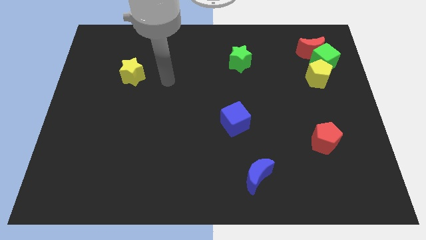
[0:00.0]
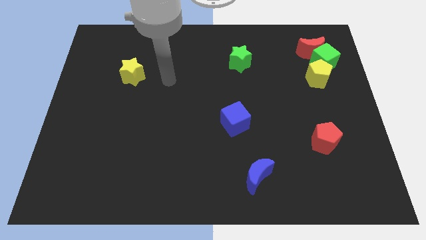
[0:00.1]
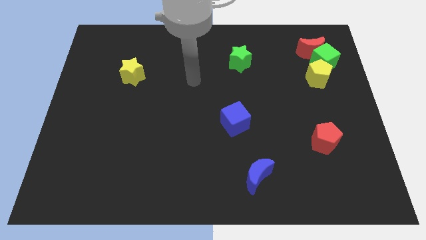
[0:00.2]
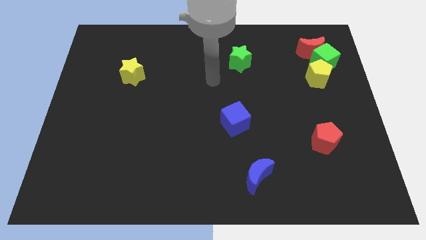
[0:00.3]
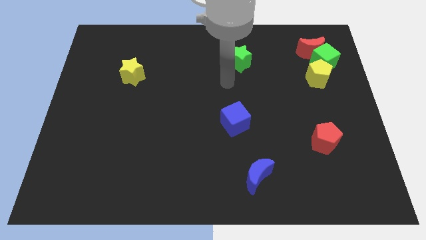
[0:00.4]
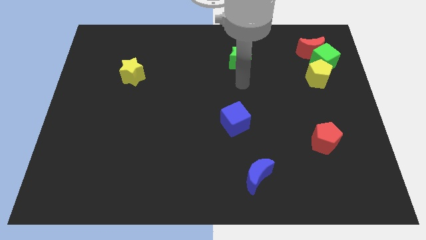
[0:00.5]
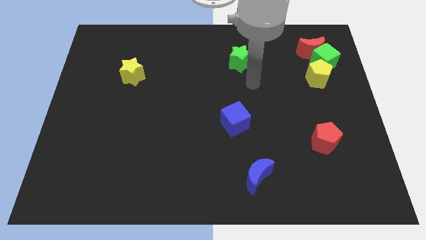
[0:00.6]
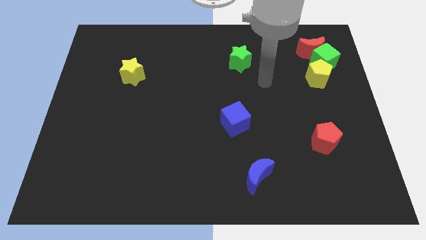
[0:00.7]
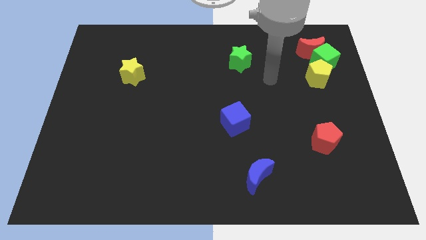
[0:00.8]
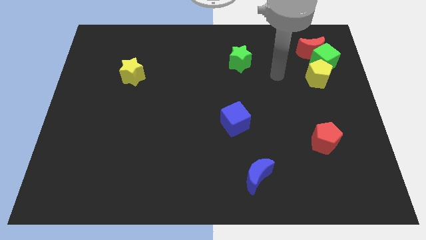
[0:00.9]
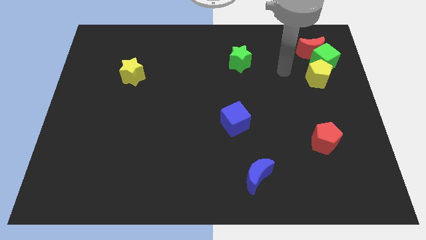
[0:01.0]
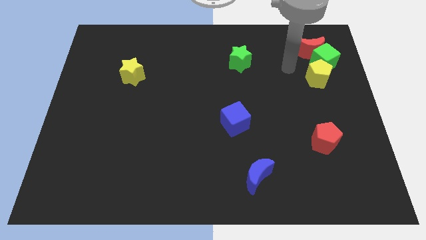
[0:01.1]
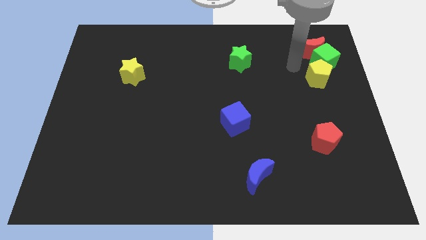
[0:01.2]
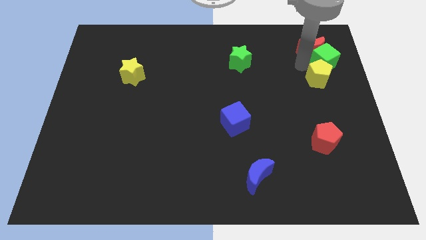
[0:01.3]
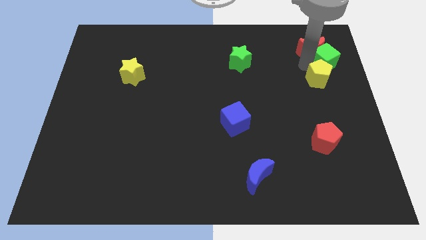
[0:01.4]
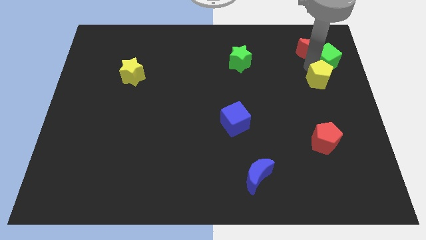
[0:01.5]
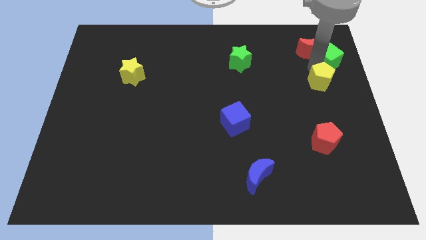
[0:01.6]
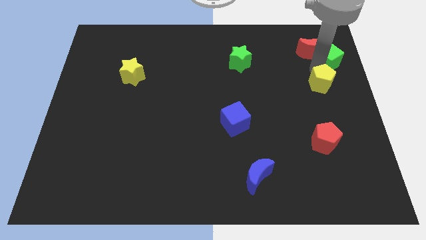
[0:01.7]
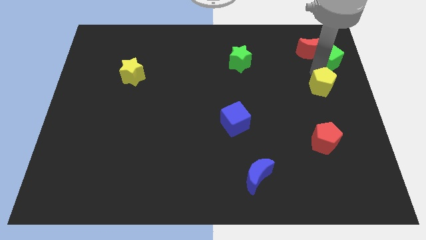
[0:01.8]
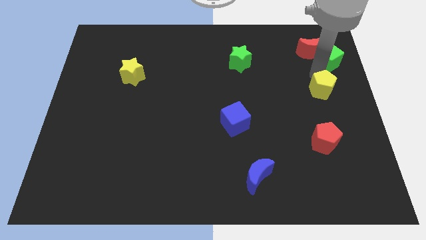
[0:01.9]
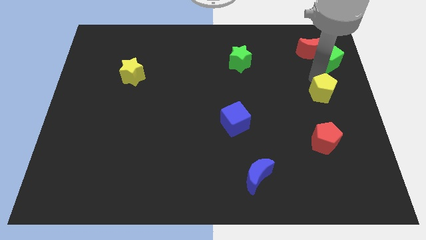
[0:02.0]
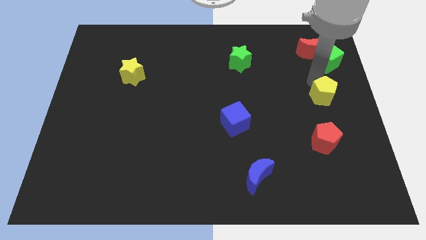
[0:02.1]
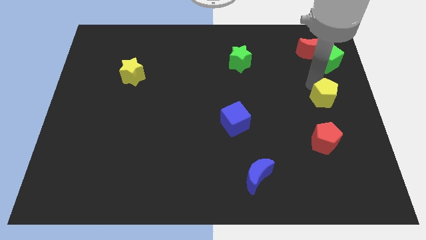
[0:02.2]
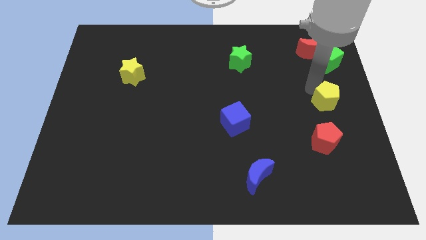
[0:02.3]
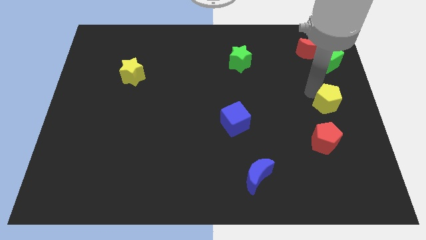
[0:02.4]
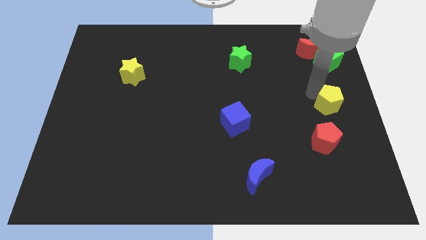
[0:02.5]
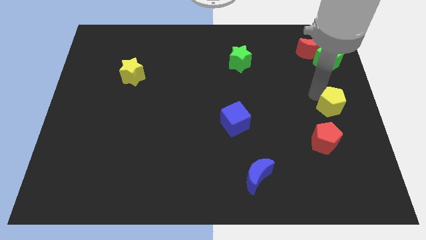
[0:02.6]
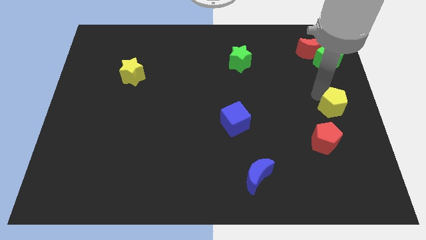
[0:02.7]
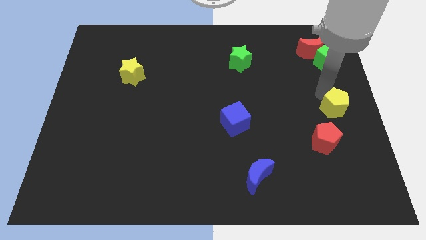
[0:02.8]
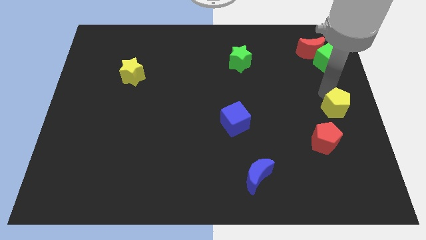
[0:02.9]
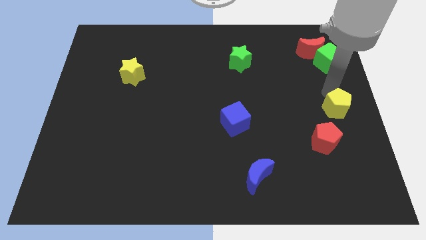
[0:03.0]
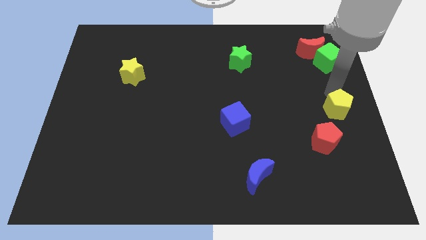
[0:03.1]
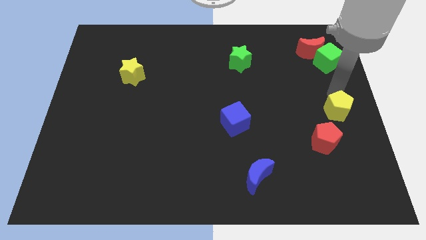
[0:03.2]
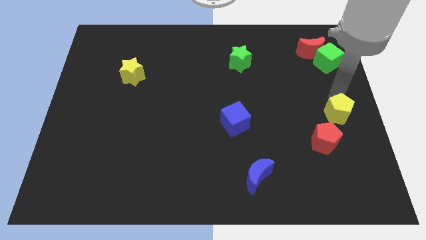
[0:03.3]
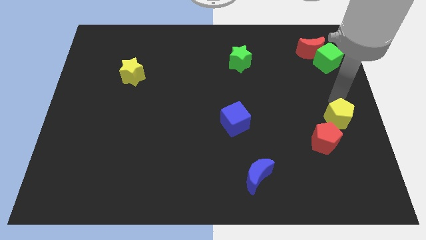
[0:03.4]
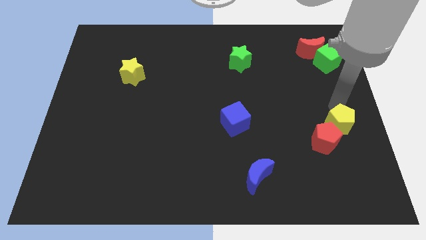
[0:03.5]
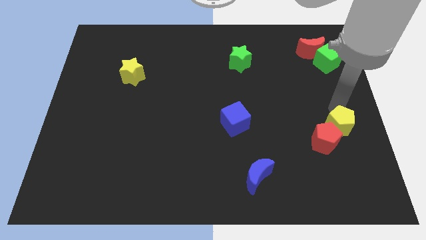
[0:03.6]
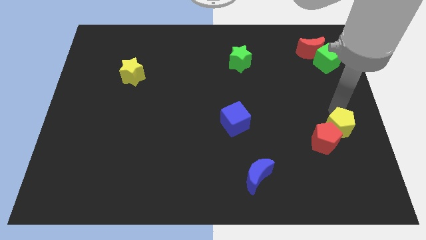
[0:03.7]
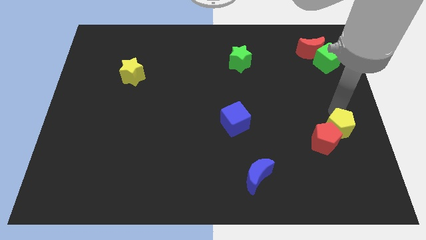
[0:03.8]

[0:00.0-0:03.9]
push the yellow pentagon to the red pentagon

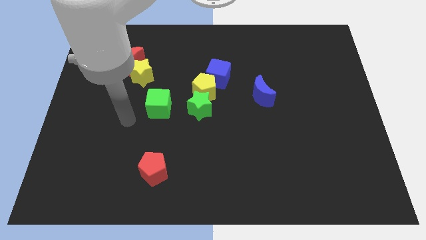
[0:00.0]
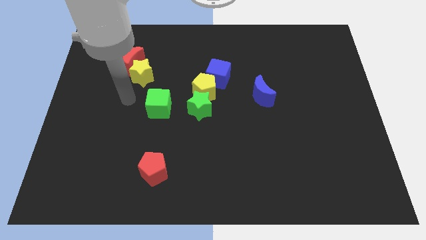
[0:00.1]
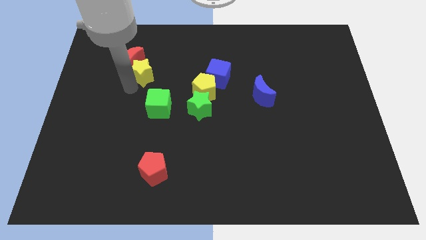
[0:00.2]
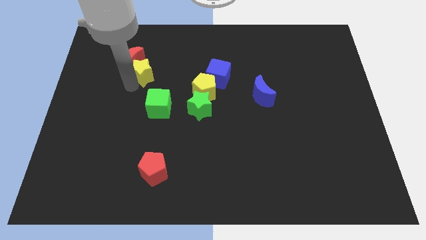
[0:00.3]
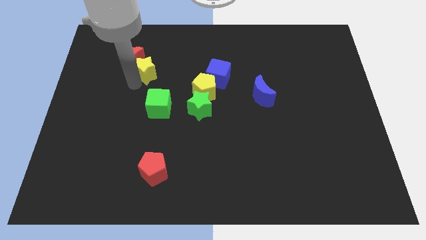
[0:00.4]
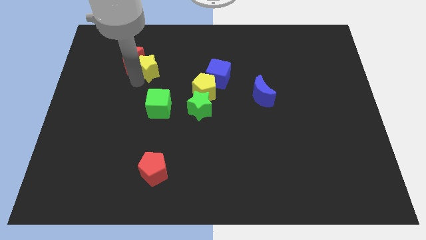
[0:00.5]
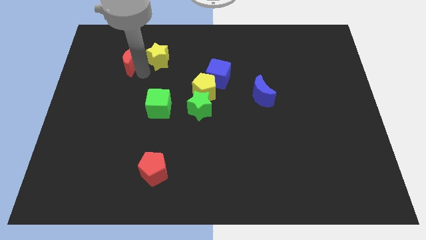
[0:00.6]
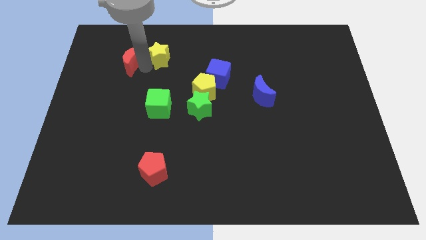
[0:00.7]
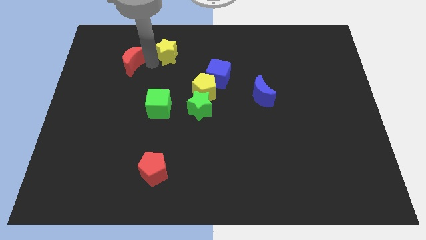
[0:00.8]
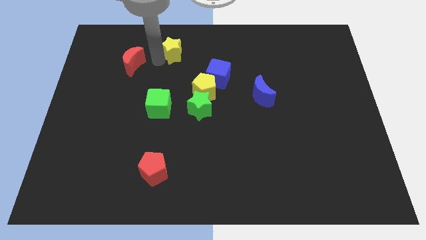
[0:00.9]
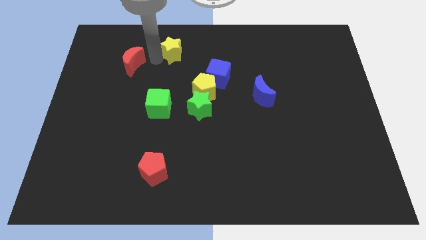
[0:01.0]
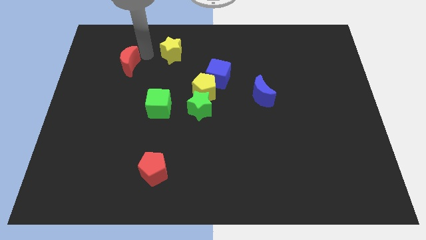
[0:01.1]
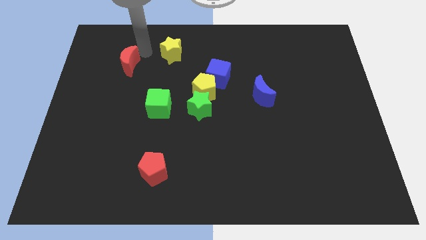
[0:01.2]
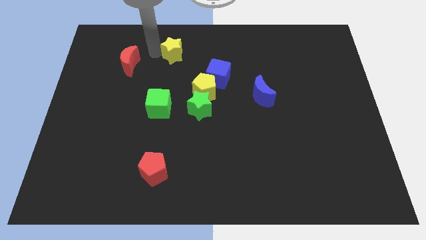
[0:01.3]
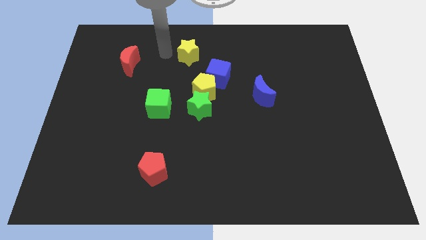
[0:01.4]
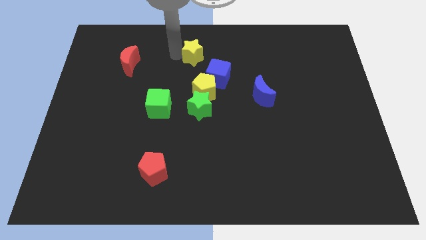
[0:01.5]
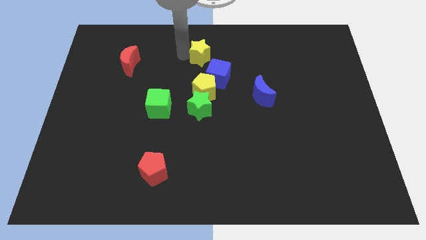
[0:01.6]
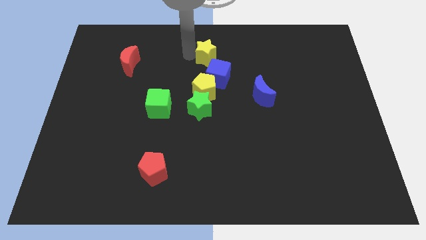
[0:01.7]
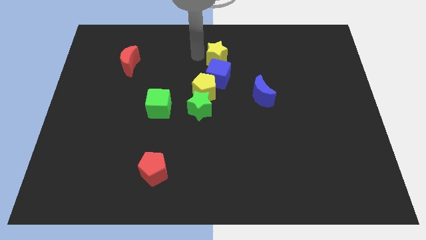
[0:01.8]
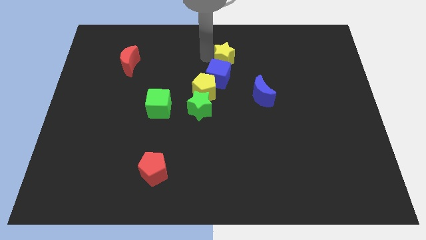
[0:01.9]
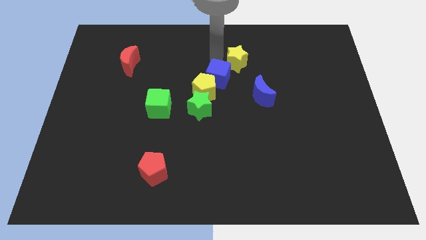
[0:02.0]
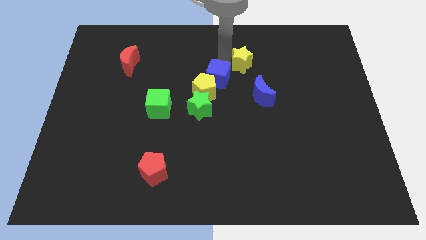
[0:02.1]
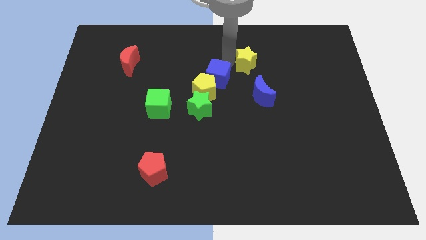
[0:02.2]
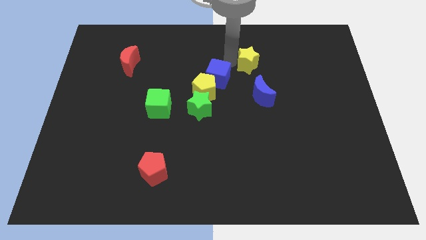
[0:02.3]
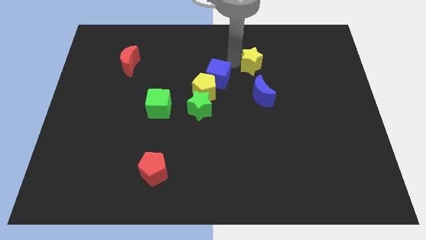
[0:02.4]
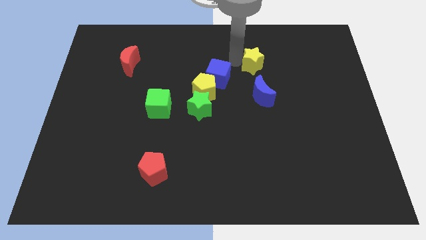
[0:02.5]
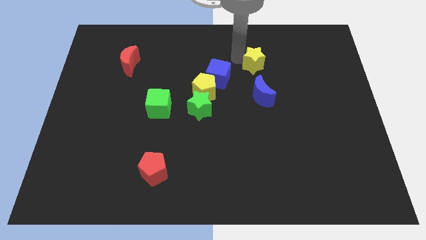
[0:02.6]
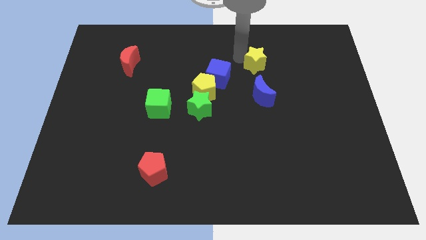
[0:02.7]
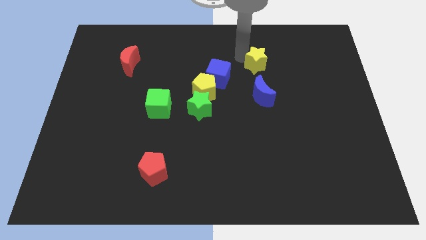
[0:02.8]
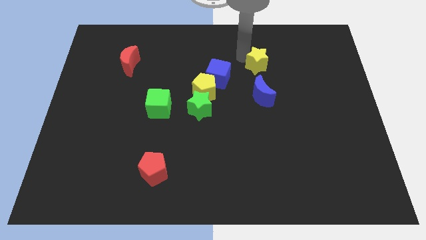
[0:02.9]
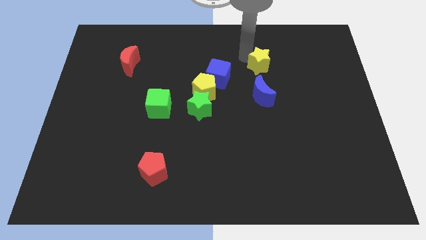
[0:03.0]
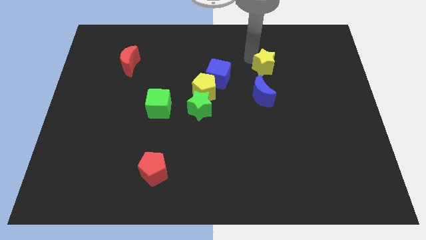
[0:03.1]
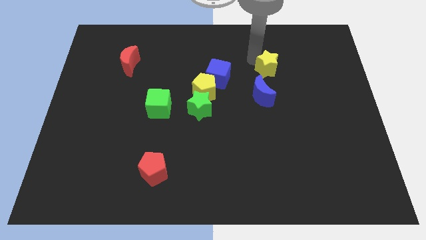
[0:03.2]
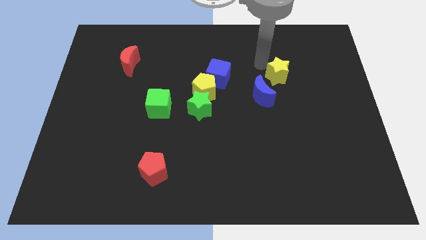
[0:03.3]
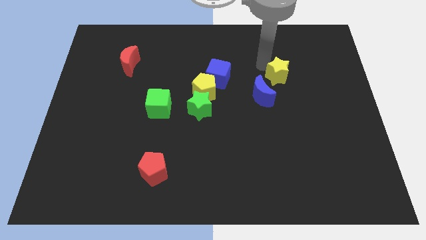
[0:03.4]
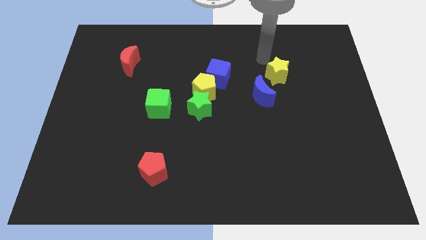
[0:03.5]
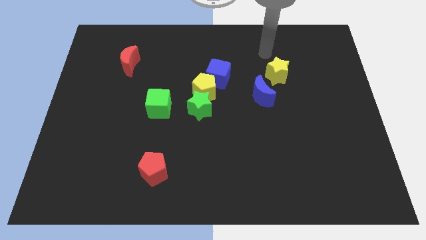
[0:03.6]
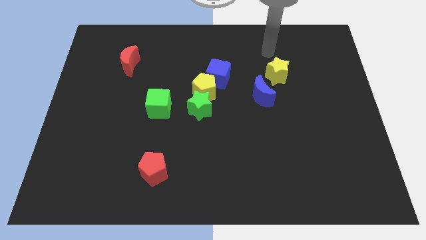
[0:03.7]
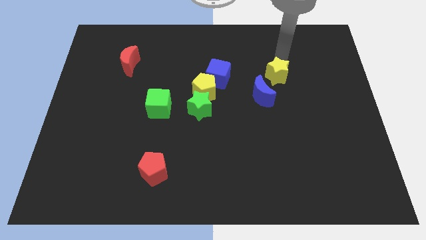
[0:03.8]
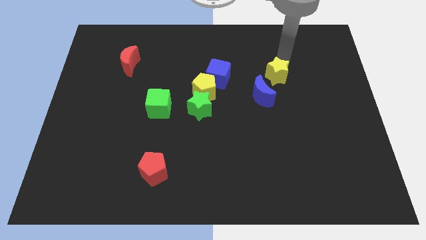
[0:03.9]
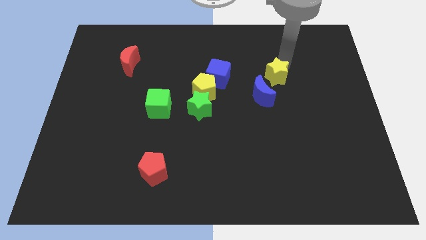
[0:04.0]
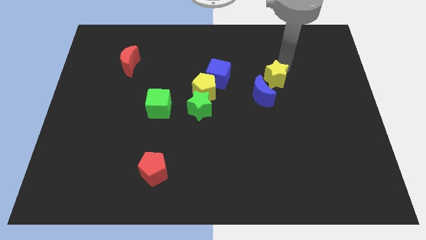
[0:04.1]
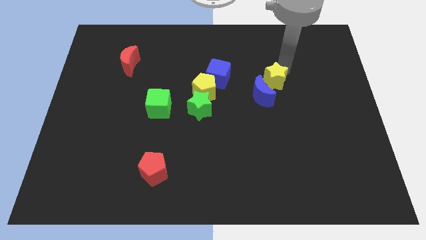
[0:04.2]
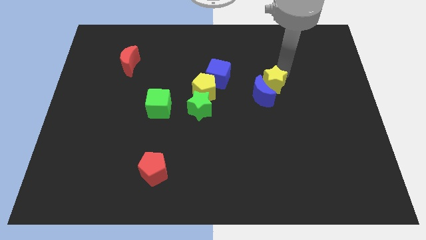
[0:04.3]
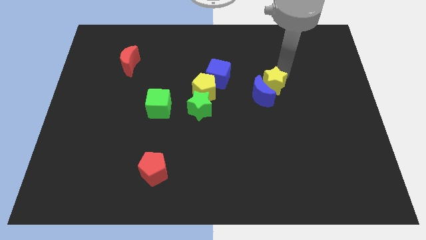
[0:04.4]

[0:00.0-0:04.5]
put the yellow star towards the blue moon
